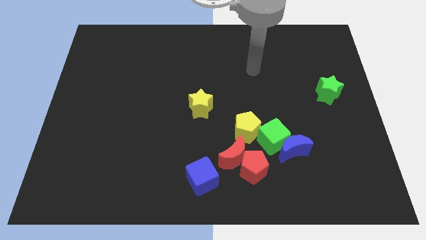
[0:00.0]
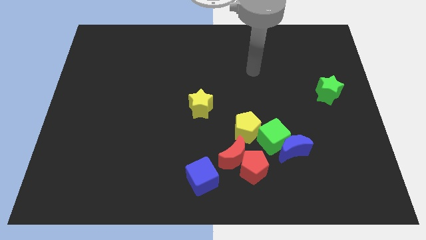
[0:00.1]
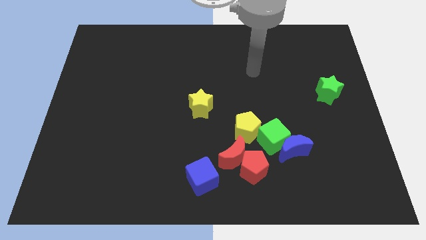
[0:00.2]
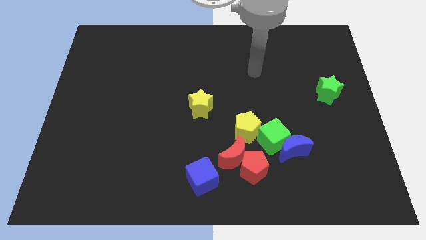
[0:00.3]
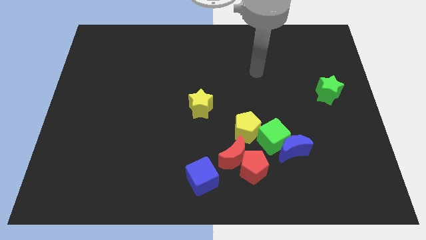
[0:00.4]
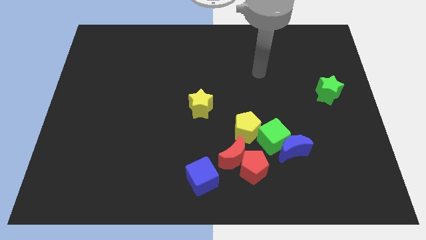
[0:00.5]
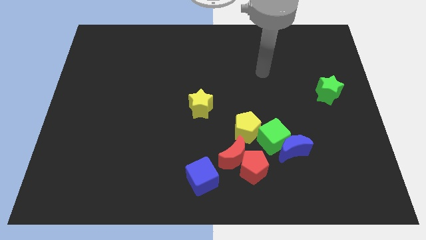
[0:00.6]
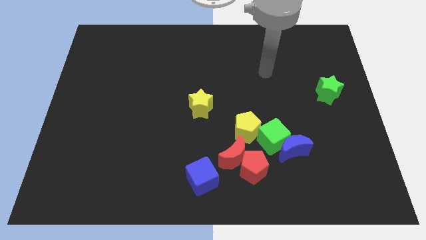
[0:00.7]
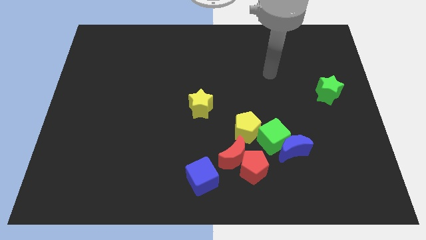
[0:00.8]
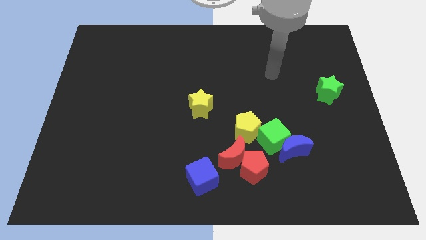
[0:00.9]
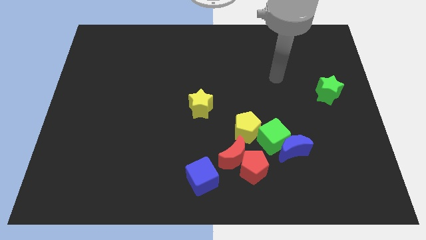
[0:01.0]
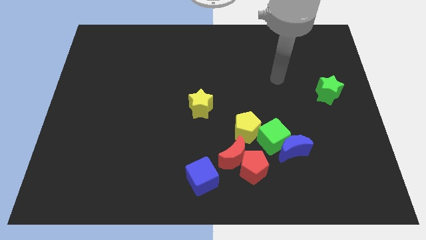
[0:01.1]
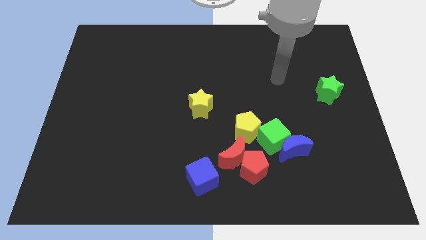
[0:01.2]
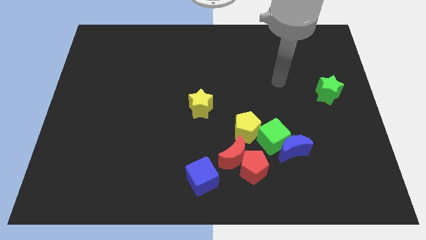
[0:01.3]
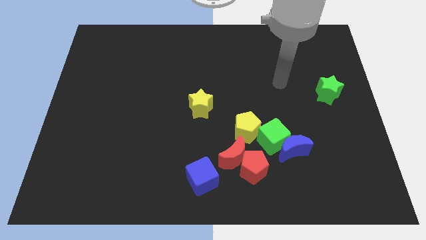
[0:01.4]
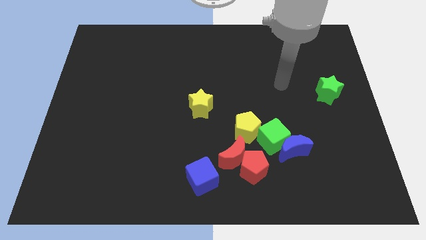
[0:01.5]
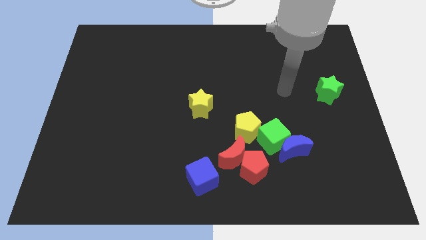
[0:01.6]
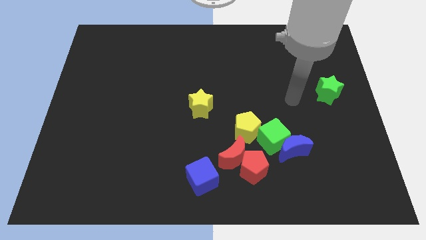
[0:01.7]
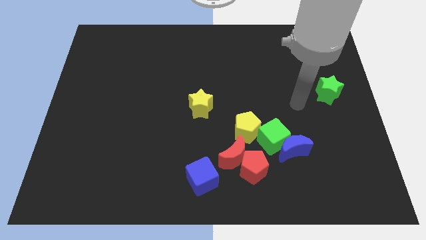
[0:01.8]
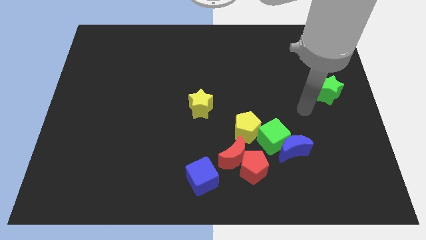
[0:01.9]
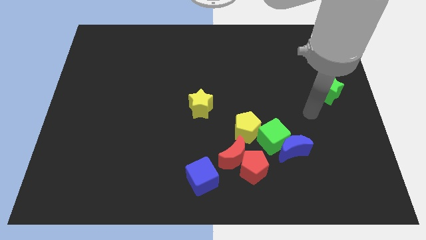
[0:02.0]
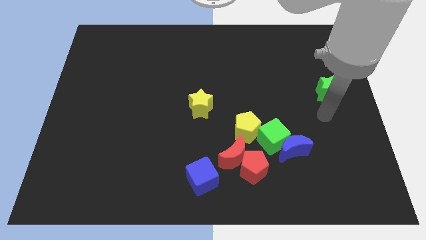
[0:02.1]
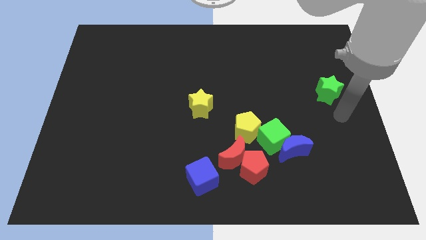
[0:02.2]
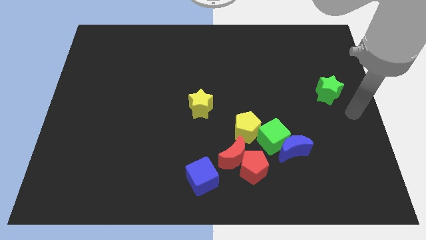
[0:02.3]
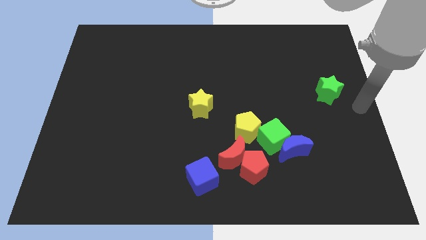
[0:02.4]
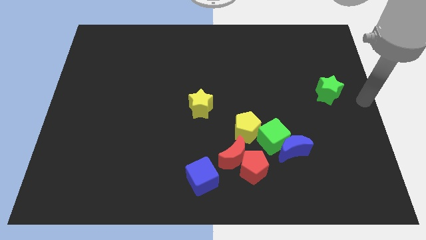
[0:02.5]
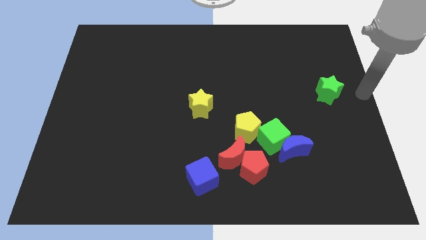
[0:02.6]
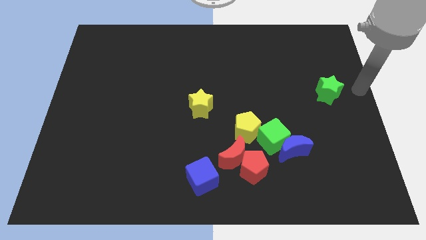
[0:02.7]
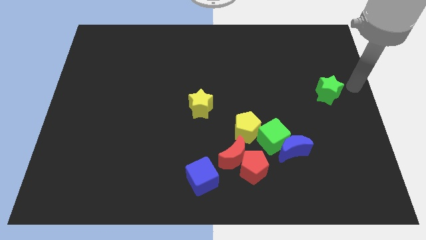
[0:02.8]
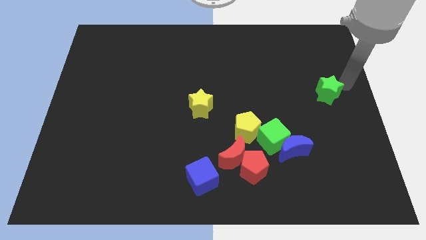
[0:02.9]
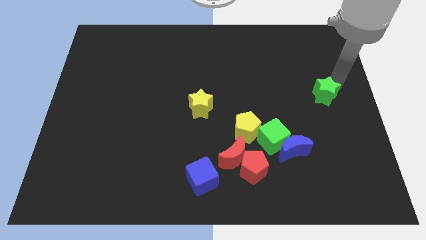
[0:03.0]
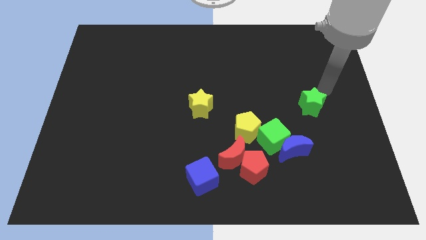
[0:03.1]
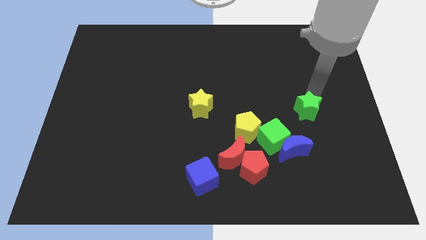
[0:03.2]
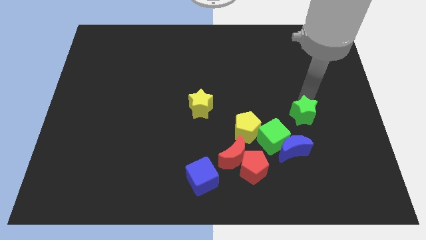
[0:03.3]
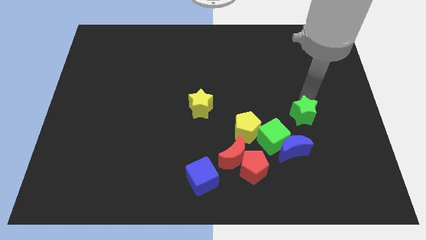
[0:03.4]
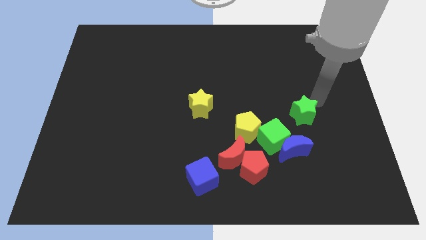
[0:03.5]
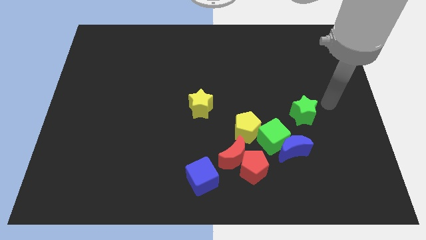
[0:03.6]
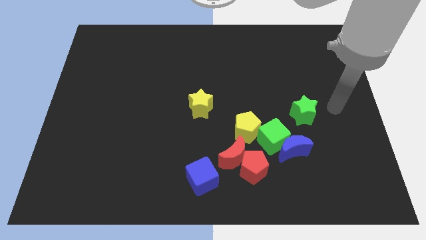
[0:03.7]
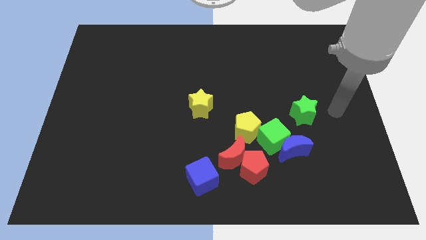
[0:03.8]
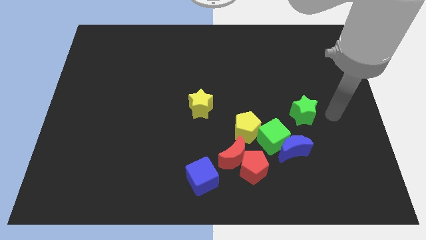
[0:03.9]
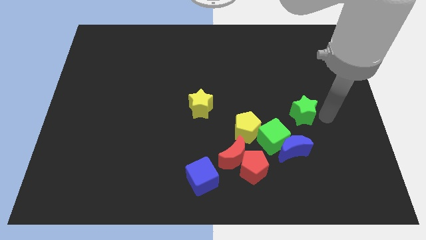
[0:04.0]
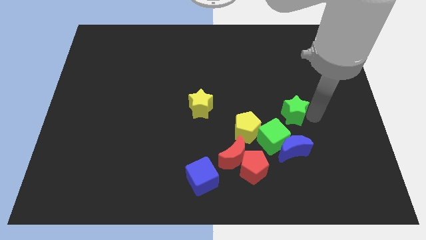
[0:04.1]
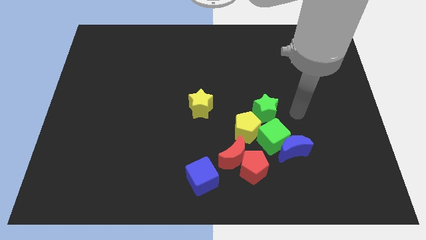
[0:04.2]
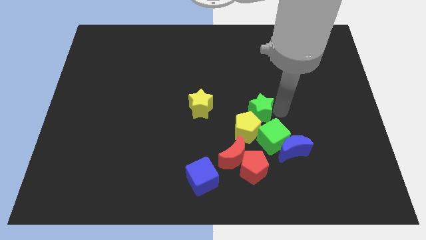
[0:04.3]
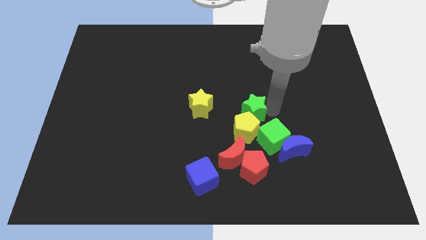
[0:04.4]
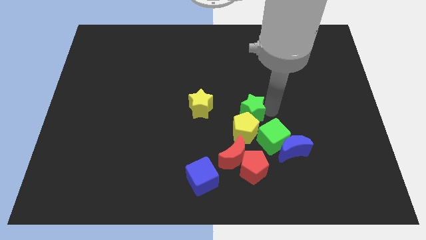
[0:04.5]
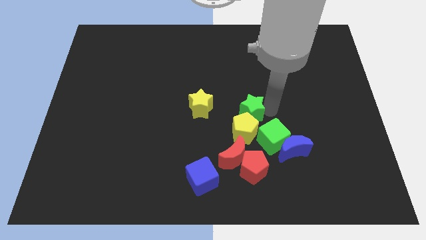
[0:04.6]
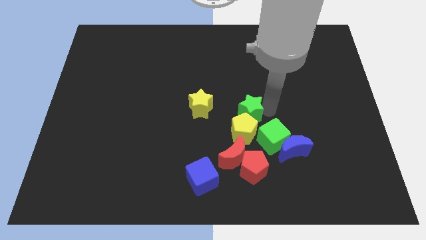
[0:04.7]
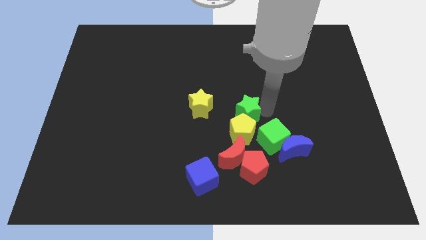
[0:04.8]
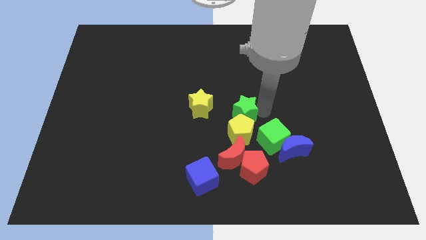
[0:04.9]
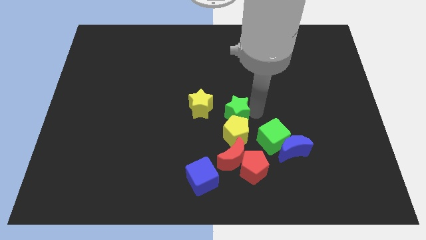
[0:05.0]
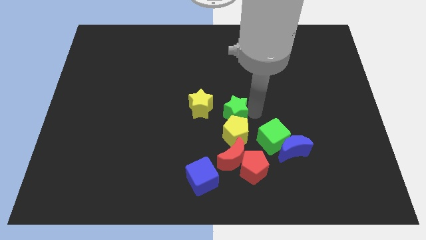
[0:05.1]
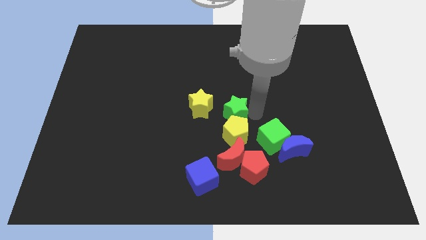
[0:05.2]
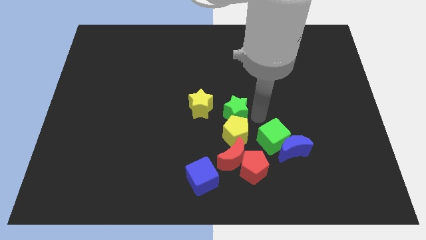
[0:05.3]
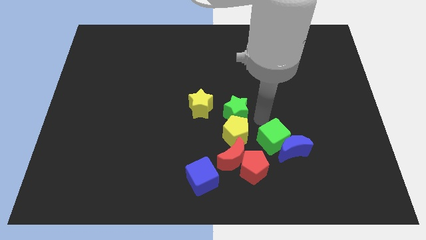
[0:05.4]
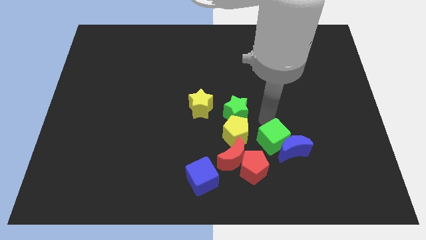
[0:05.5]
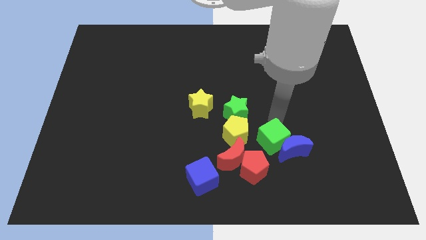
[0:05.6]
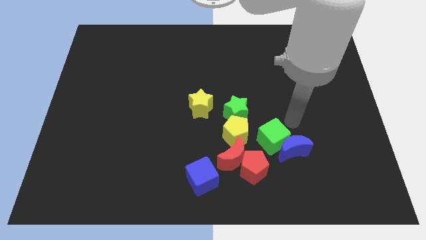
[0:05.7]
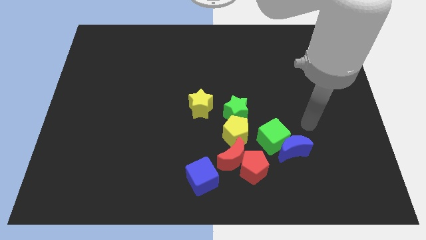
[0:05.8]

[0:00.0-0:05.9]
put the green star to the top side of the yellow pentagon

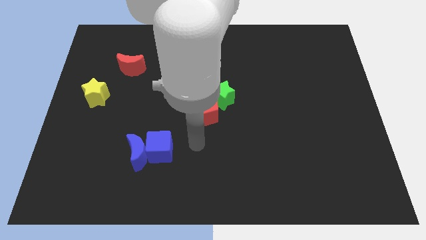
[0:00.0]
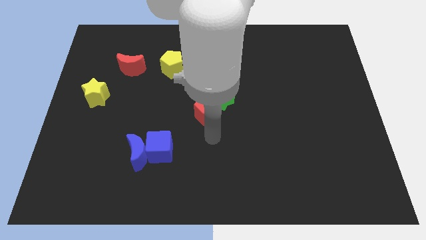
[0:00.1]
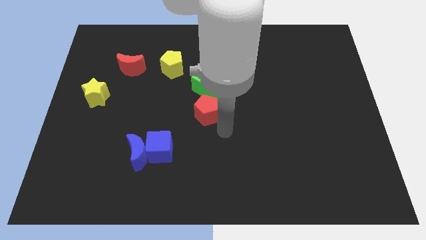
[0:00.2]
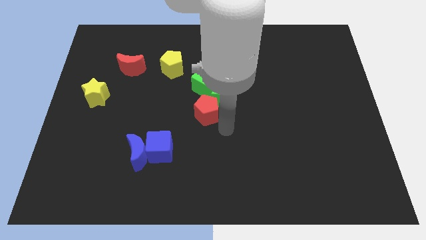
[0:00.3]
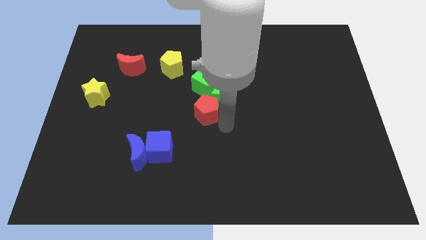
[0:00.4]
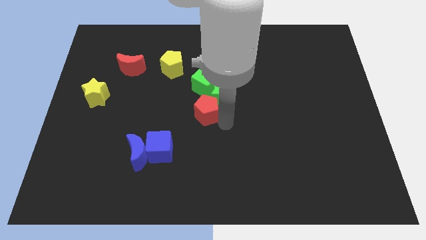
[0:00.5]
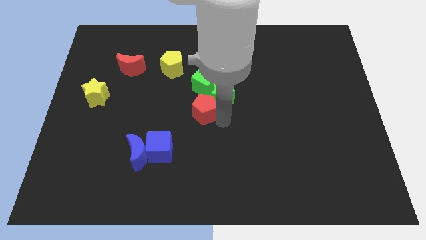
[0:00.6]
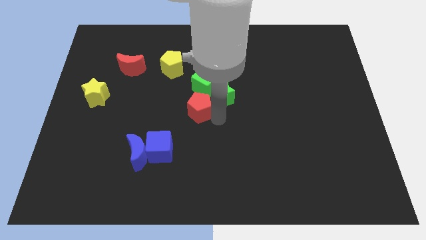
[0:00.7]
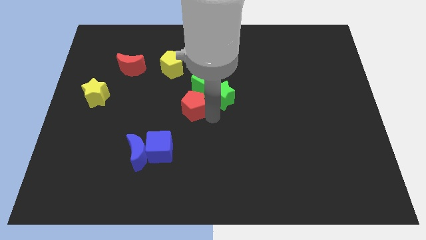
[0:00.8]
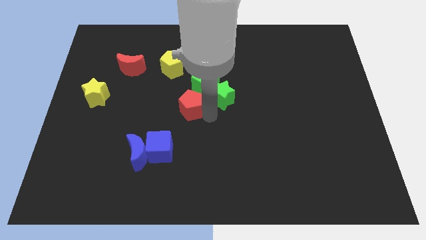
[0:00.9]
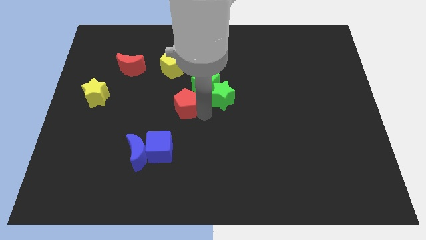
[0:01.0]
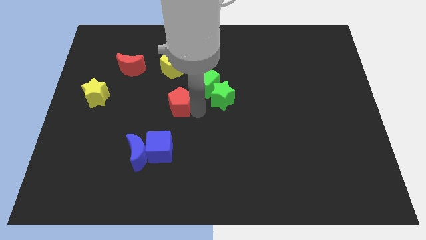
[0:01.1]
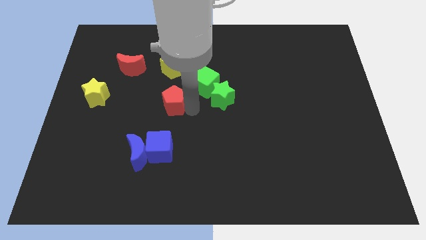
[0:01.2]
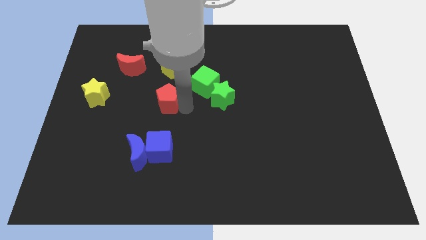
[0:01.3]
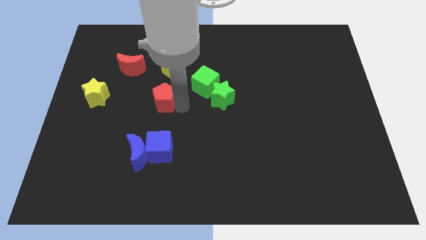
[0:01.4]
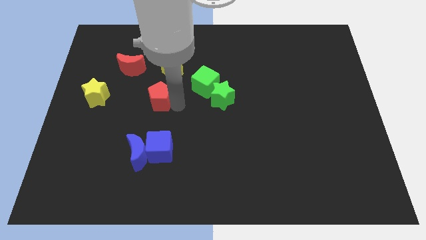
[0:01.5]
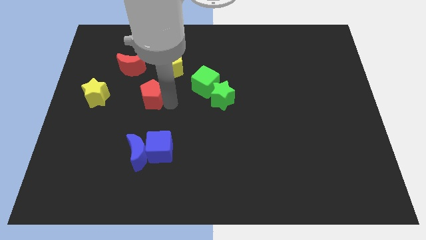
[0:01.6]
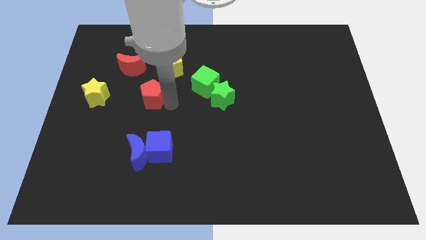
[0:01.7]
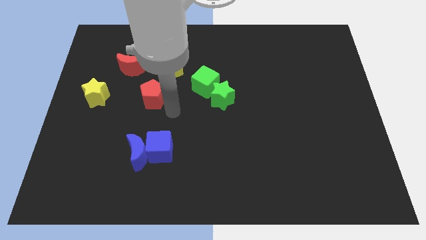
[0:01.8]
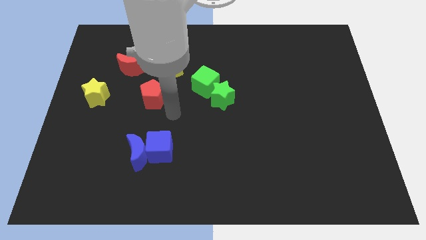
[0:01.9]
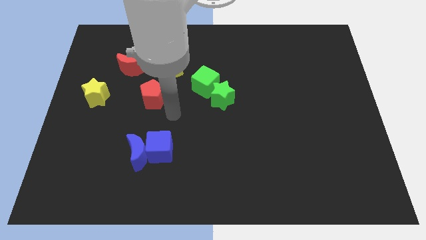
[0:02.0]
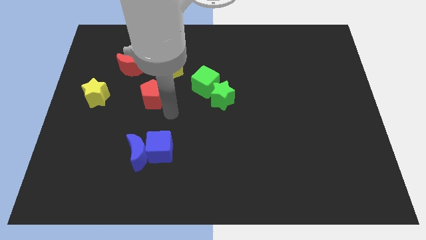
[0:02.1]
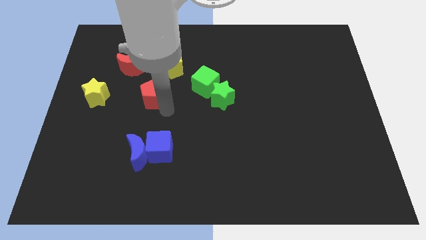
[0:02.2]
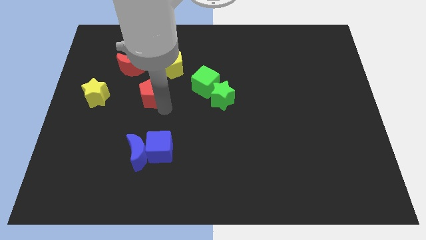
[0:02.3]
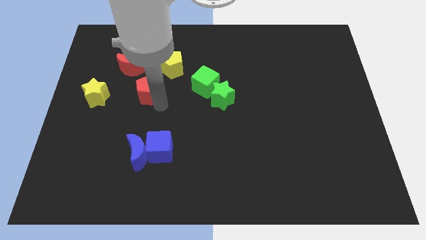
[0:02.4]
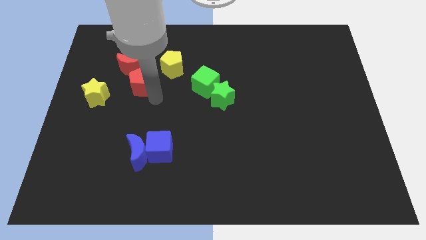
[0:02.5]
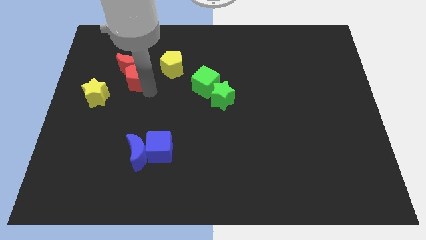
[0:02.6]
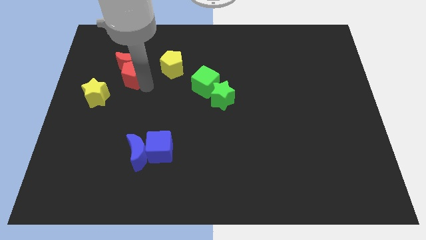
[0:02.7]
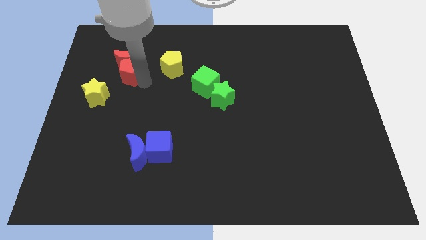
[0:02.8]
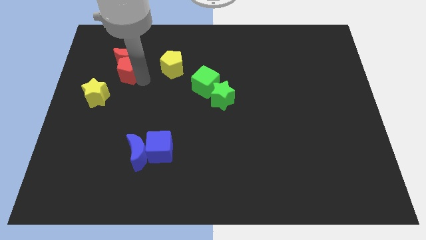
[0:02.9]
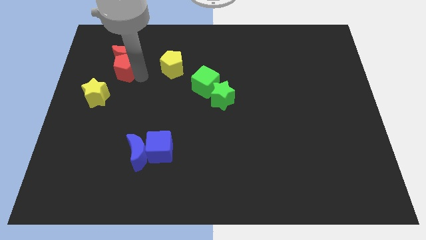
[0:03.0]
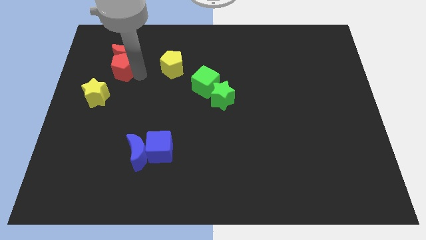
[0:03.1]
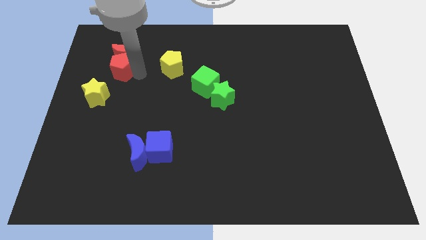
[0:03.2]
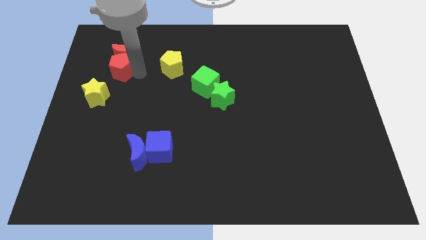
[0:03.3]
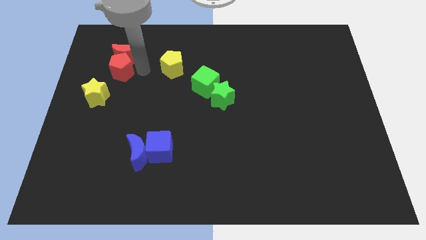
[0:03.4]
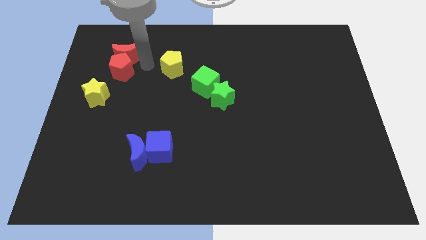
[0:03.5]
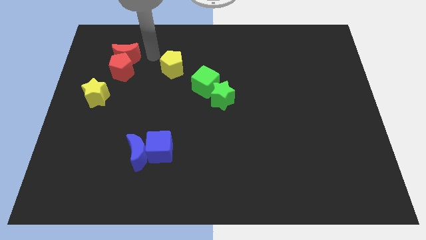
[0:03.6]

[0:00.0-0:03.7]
push the red pentagon below the red crescent
